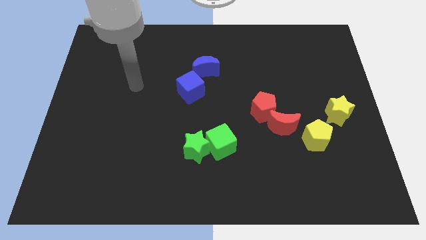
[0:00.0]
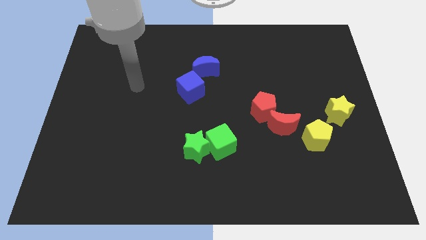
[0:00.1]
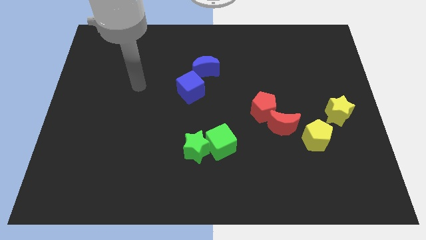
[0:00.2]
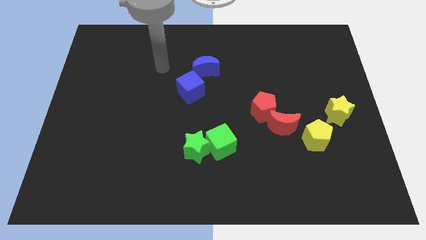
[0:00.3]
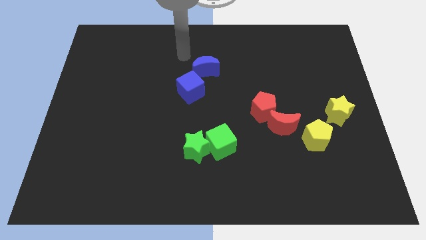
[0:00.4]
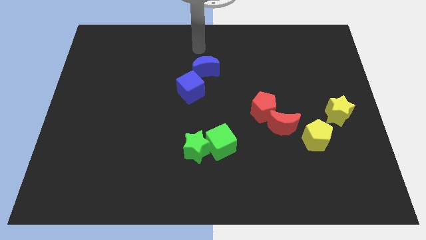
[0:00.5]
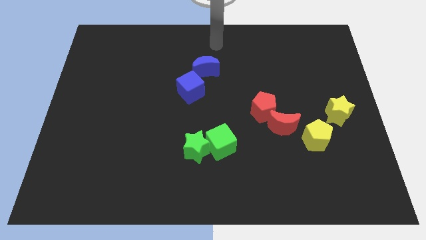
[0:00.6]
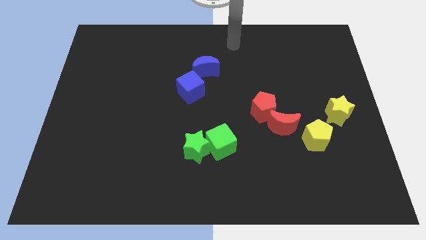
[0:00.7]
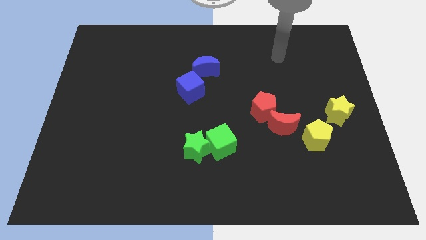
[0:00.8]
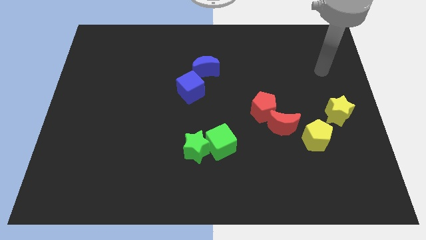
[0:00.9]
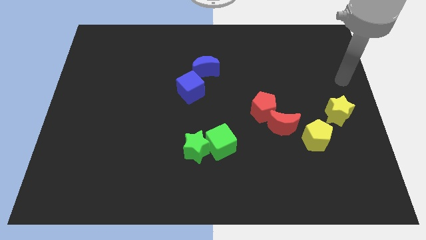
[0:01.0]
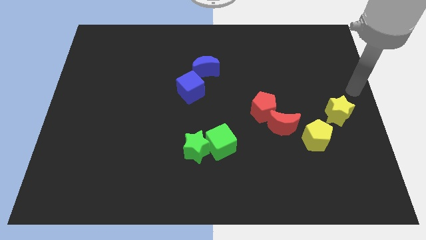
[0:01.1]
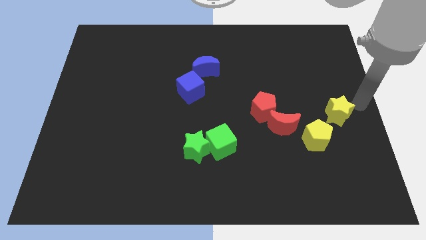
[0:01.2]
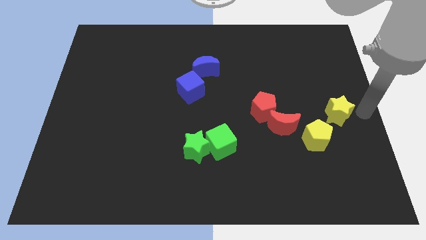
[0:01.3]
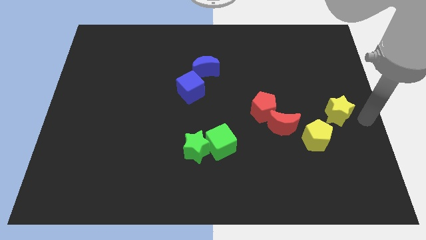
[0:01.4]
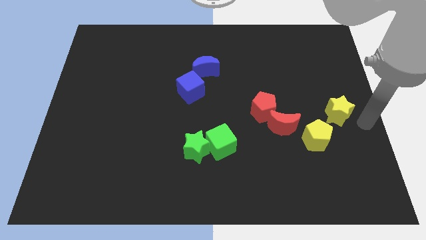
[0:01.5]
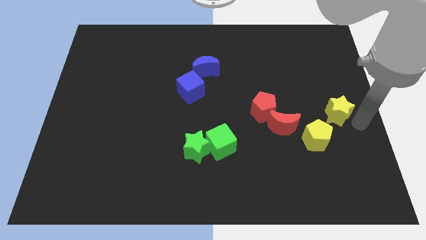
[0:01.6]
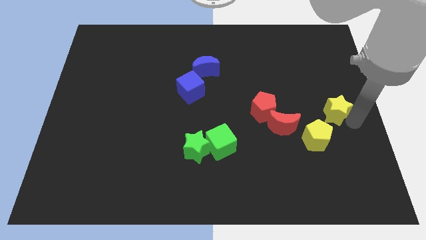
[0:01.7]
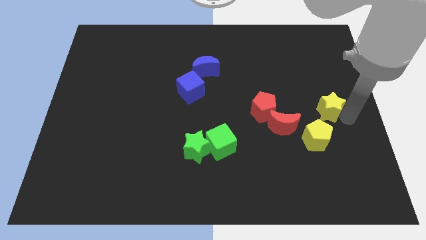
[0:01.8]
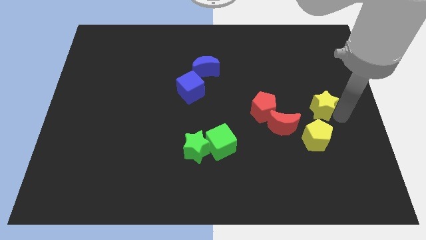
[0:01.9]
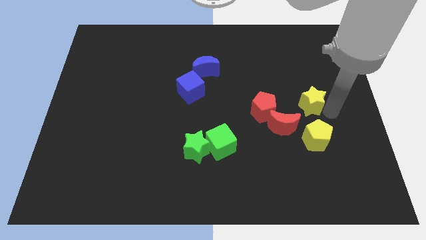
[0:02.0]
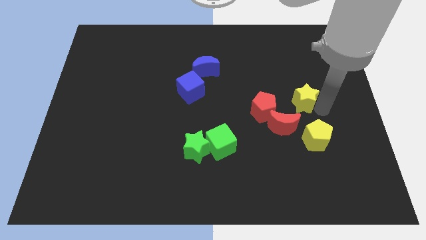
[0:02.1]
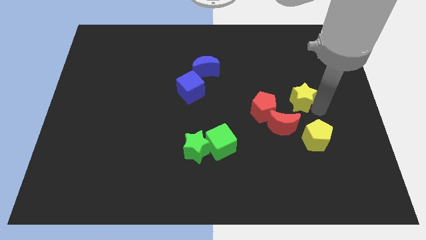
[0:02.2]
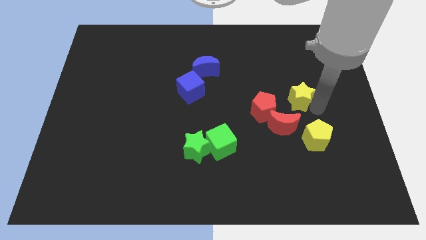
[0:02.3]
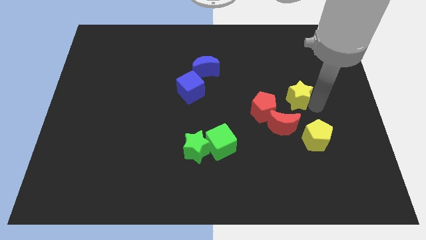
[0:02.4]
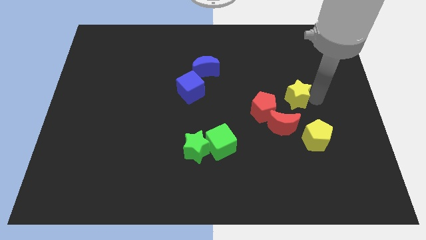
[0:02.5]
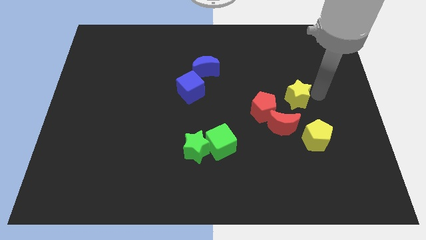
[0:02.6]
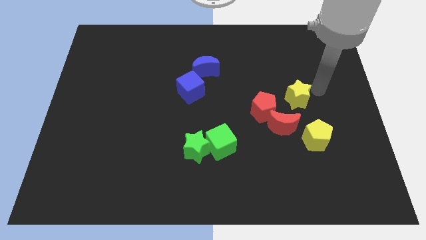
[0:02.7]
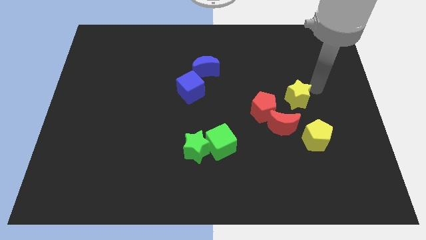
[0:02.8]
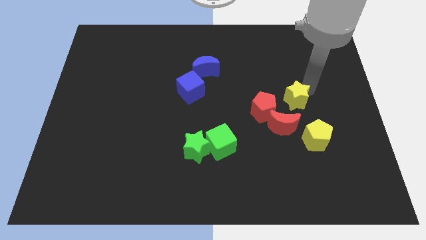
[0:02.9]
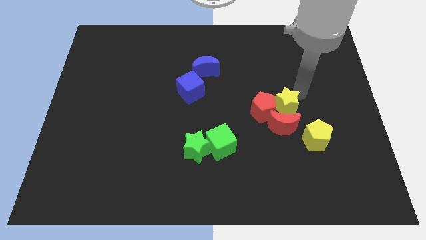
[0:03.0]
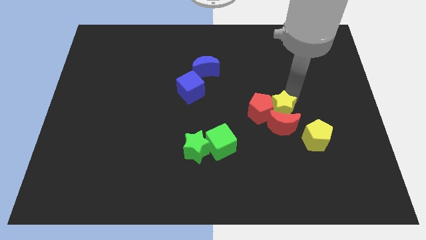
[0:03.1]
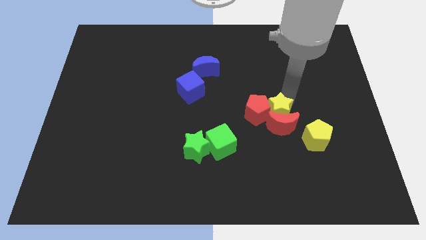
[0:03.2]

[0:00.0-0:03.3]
move the yellow star to the red pentagon

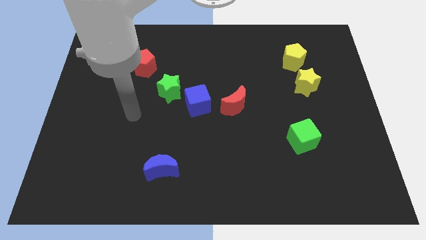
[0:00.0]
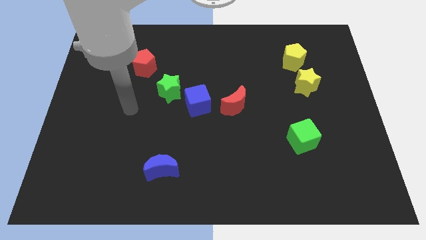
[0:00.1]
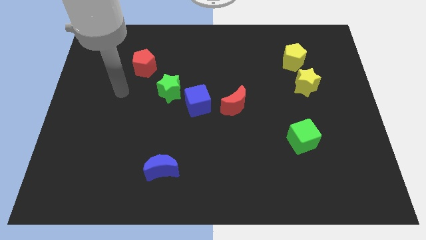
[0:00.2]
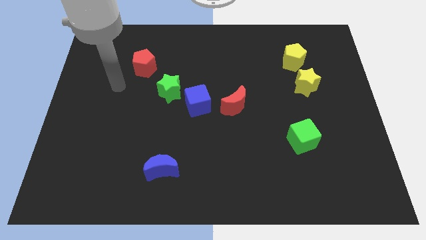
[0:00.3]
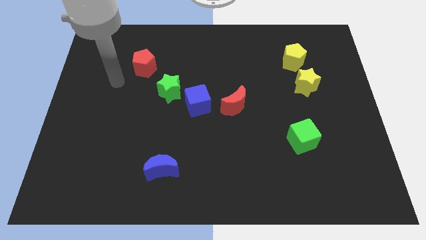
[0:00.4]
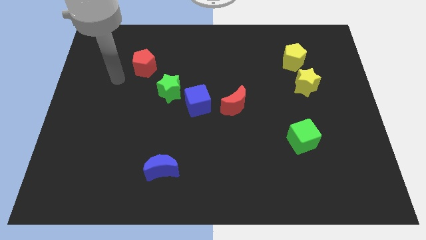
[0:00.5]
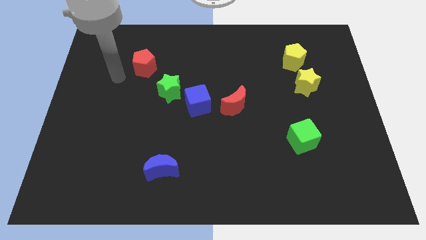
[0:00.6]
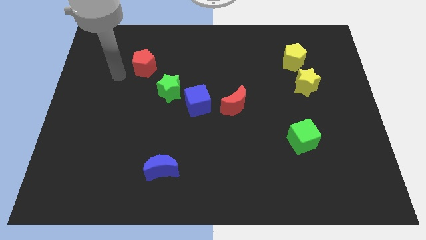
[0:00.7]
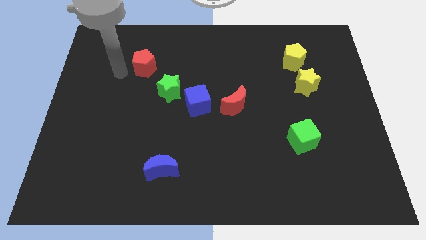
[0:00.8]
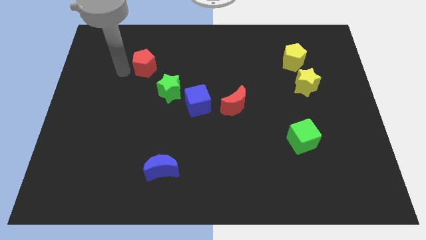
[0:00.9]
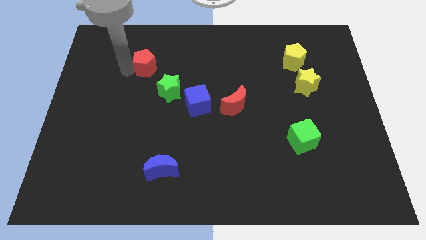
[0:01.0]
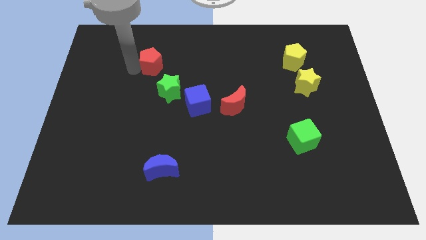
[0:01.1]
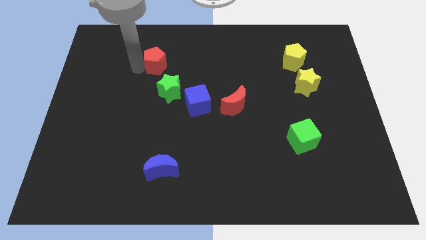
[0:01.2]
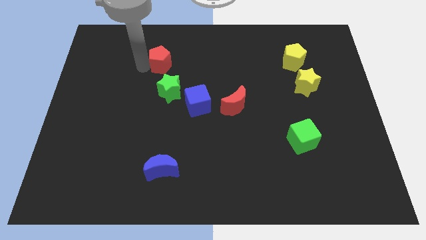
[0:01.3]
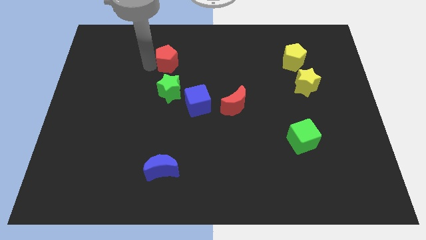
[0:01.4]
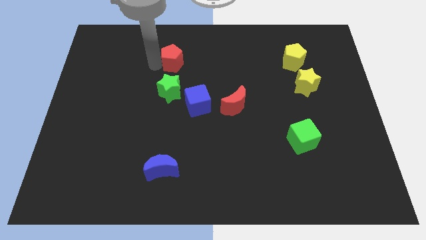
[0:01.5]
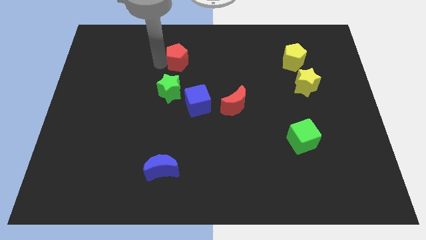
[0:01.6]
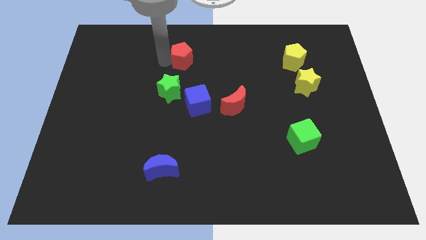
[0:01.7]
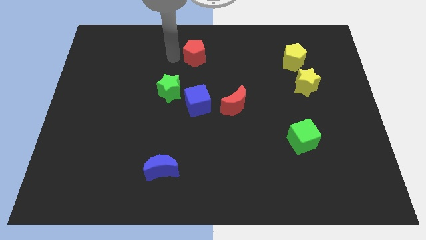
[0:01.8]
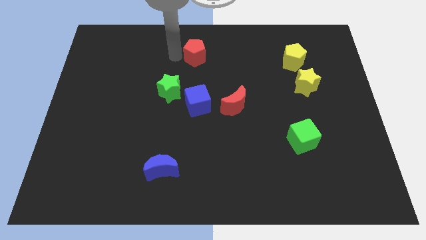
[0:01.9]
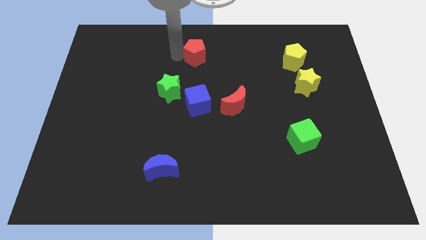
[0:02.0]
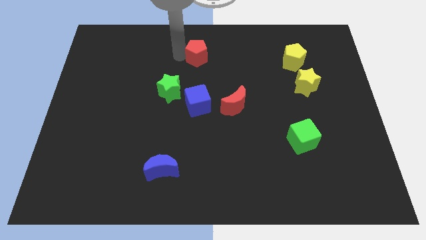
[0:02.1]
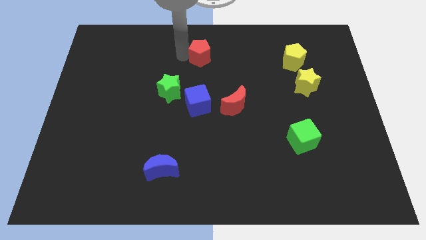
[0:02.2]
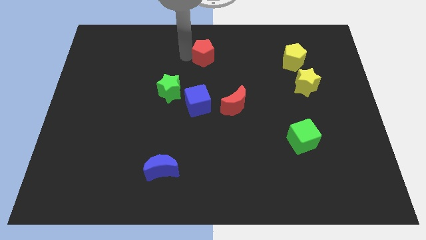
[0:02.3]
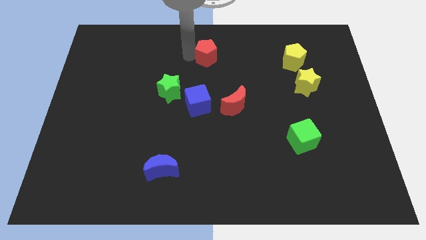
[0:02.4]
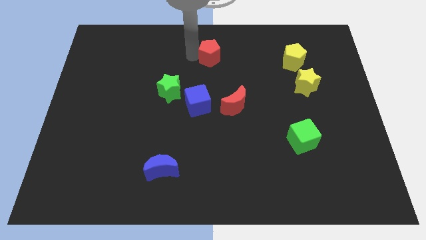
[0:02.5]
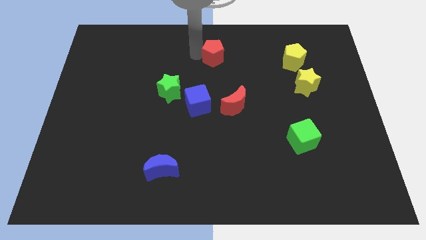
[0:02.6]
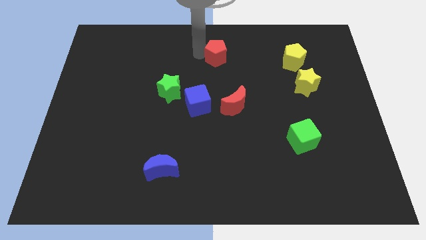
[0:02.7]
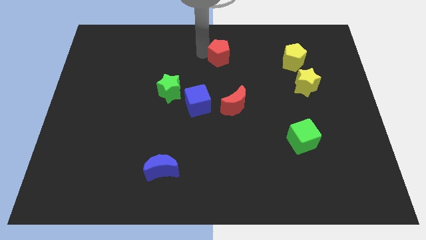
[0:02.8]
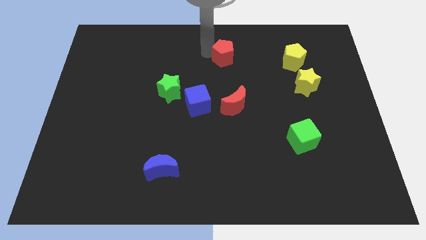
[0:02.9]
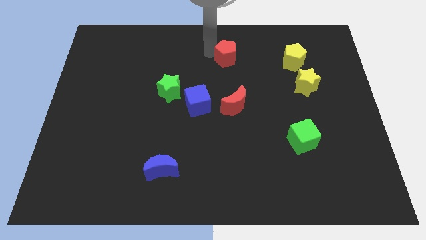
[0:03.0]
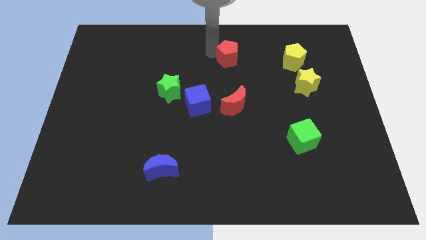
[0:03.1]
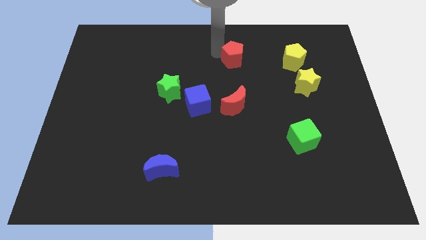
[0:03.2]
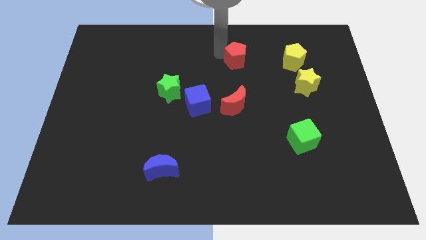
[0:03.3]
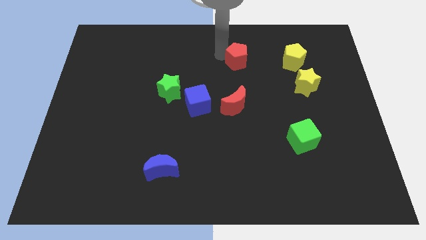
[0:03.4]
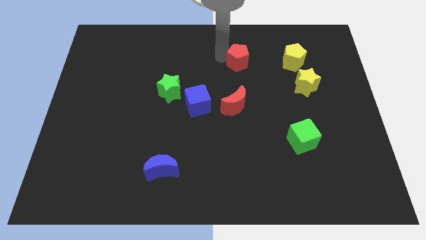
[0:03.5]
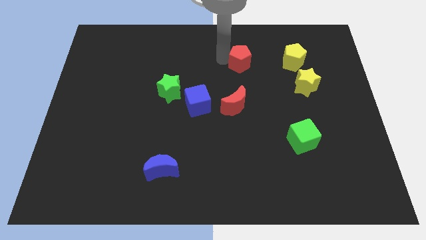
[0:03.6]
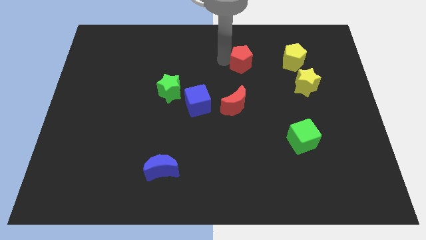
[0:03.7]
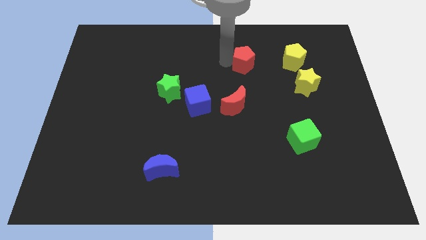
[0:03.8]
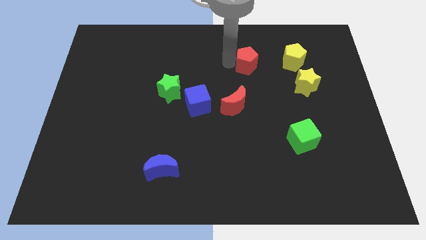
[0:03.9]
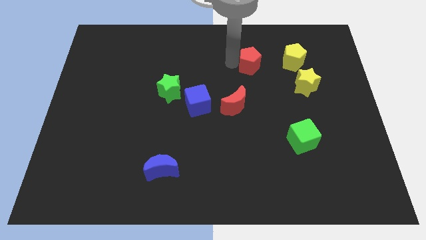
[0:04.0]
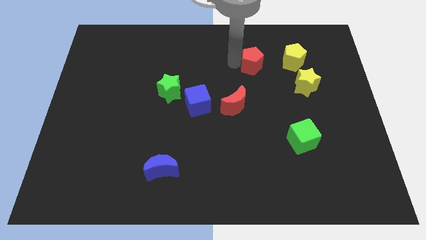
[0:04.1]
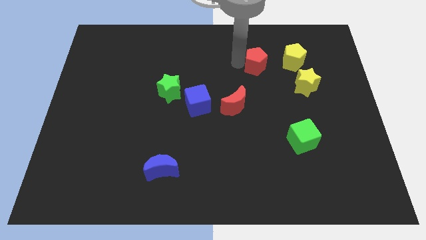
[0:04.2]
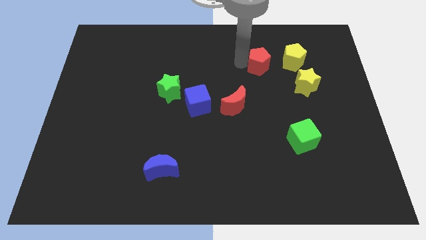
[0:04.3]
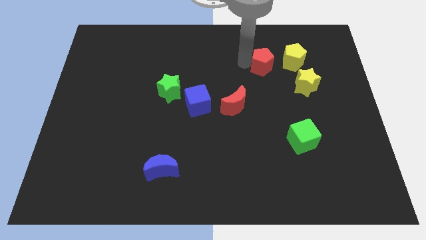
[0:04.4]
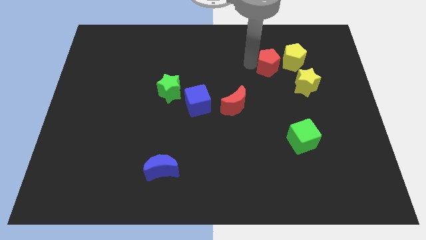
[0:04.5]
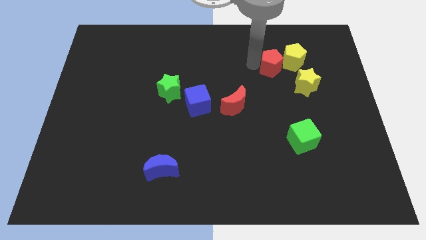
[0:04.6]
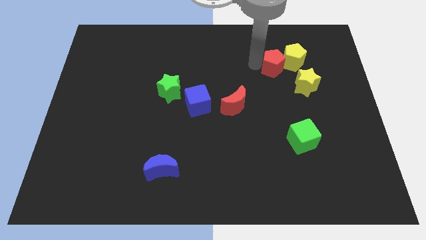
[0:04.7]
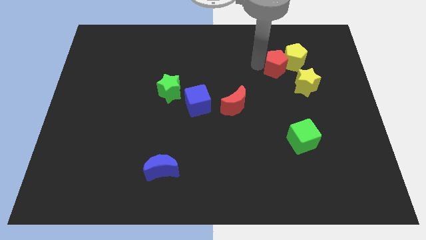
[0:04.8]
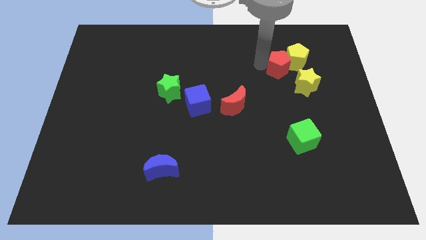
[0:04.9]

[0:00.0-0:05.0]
slide the red pentagon close to the yellow pentagon
